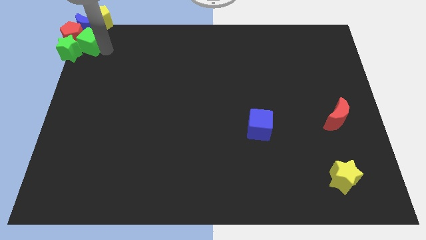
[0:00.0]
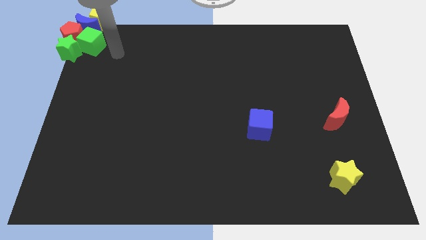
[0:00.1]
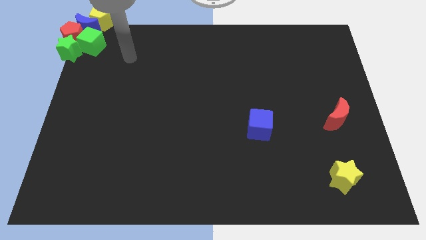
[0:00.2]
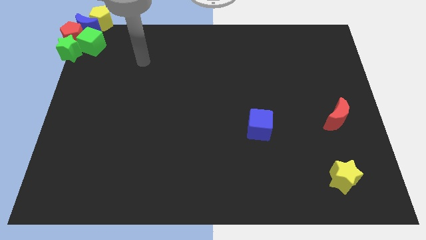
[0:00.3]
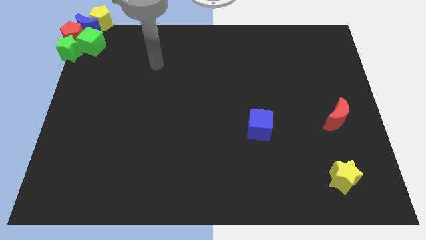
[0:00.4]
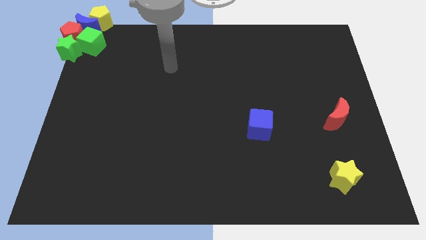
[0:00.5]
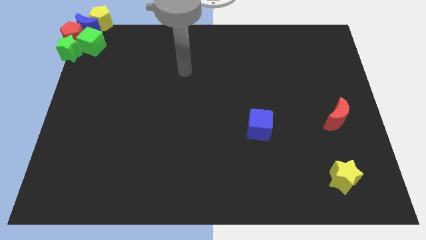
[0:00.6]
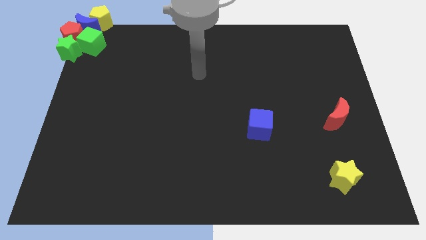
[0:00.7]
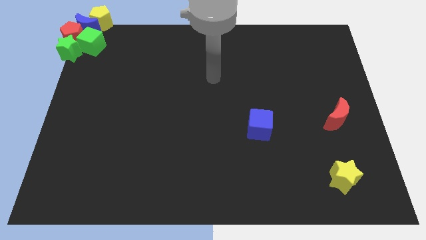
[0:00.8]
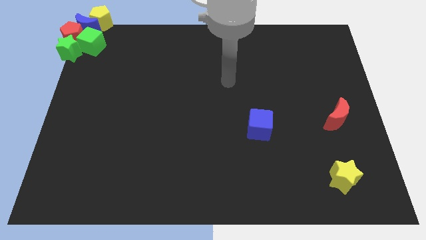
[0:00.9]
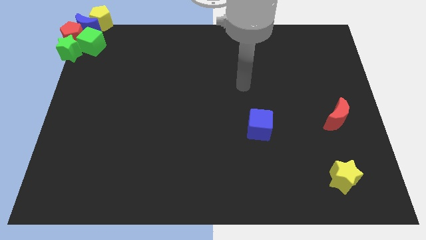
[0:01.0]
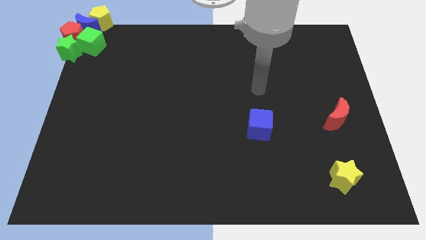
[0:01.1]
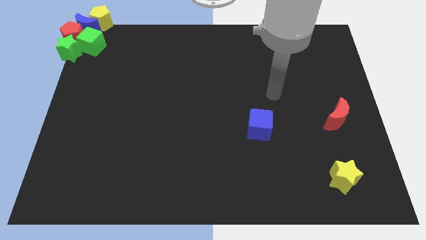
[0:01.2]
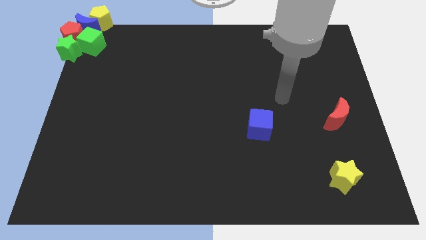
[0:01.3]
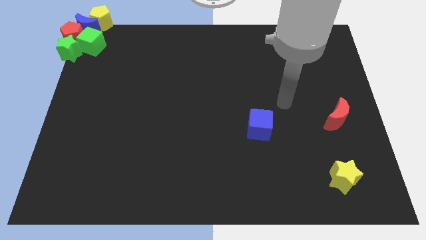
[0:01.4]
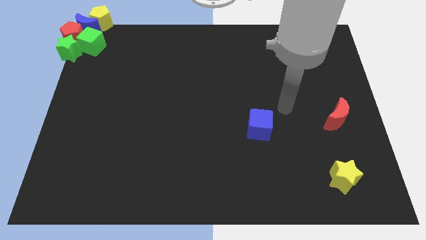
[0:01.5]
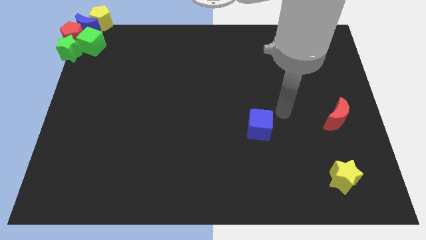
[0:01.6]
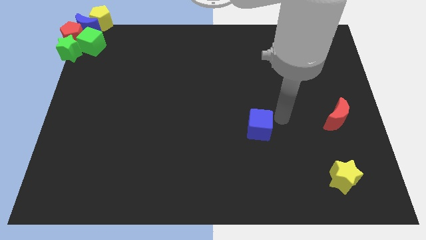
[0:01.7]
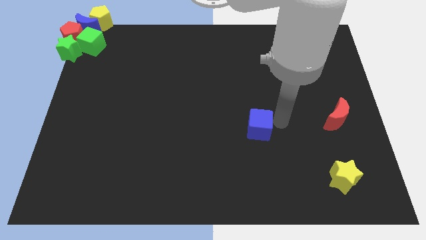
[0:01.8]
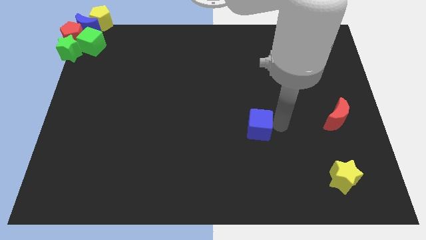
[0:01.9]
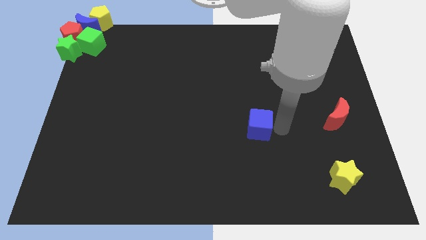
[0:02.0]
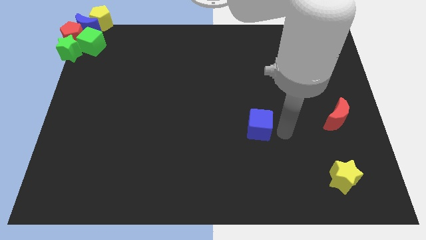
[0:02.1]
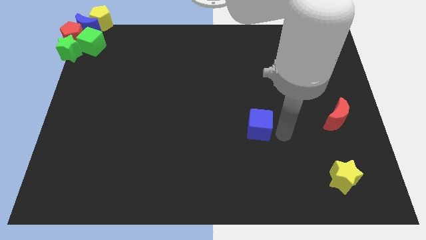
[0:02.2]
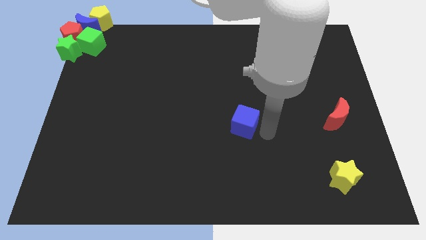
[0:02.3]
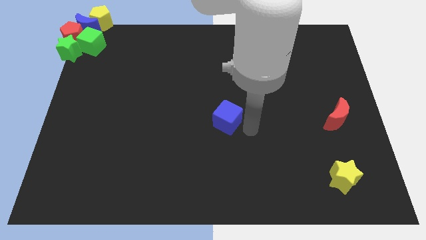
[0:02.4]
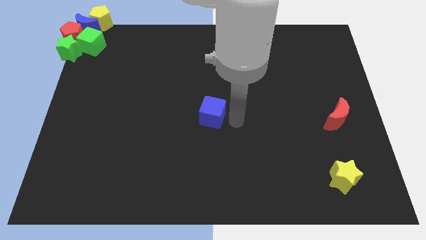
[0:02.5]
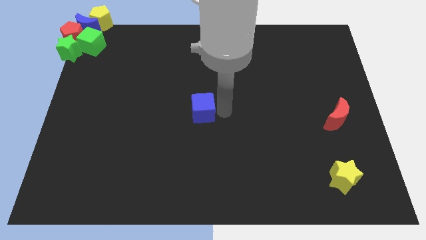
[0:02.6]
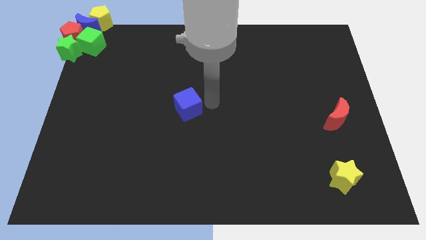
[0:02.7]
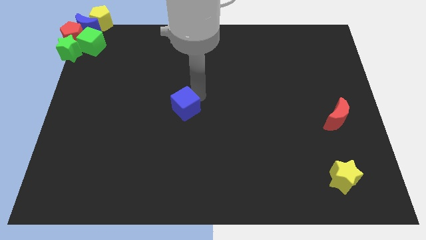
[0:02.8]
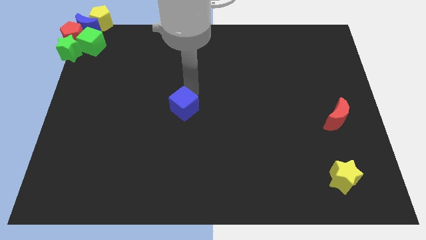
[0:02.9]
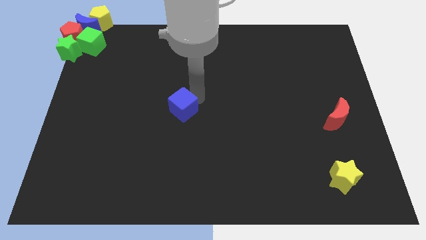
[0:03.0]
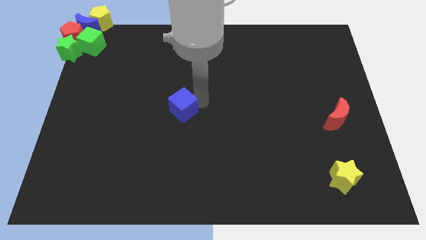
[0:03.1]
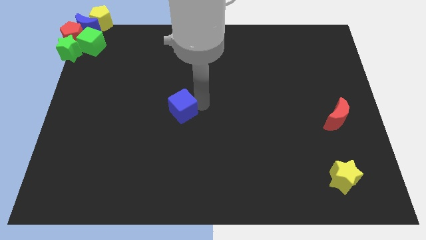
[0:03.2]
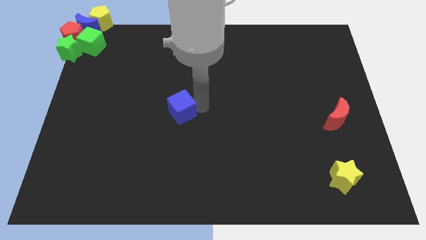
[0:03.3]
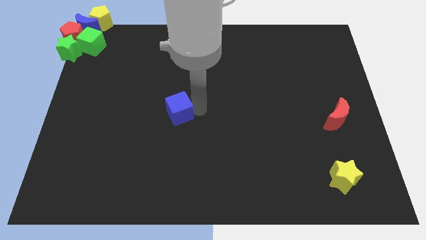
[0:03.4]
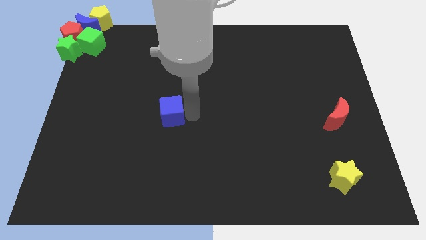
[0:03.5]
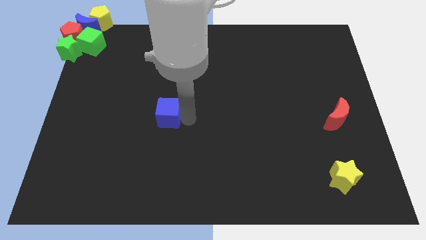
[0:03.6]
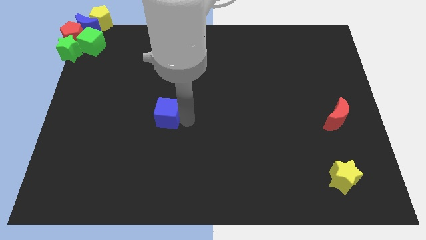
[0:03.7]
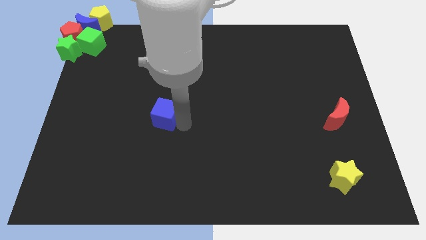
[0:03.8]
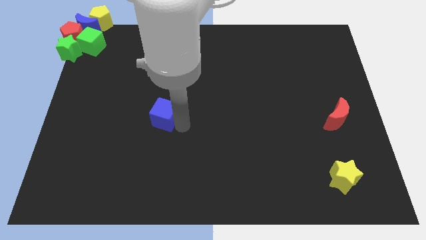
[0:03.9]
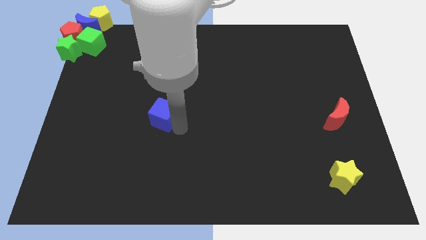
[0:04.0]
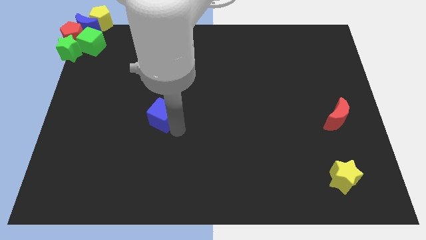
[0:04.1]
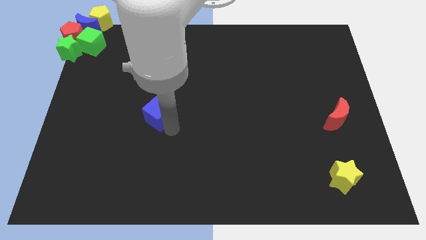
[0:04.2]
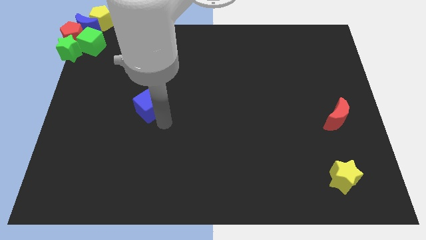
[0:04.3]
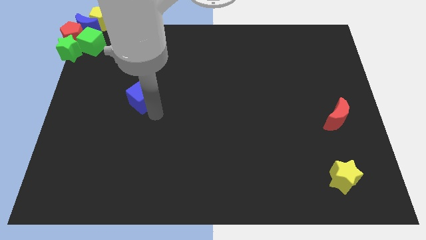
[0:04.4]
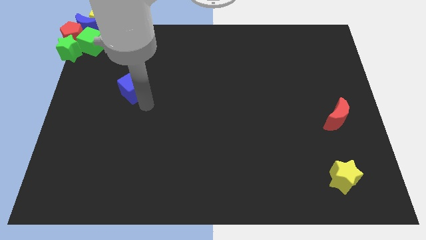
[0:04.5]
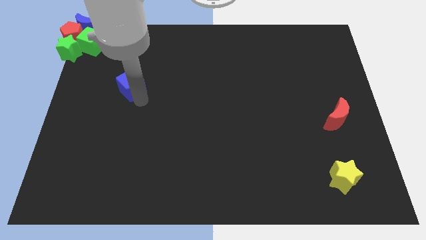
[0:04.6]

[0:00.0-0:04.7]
slide the blue cube towards the group of blocks

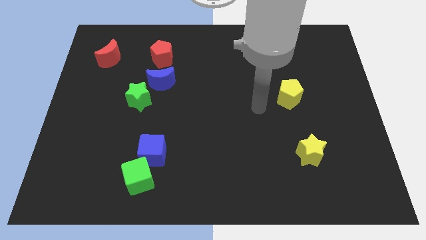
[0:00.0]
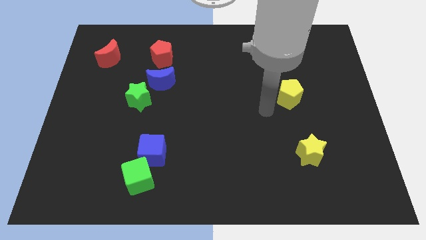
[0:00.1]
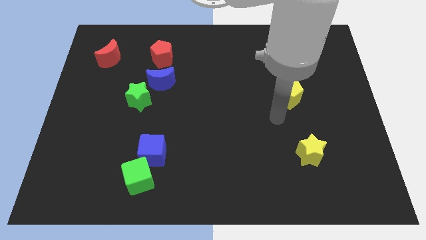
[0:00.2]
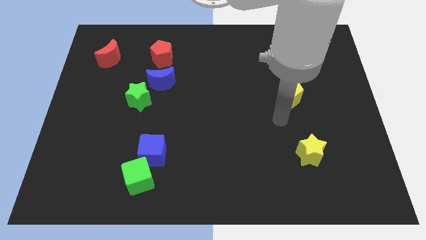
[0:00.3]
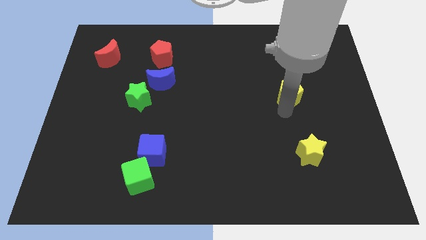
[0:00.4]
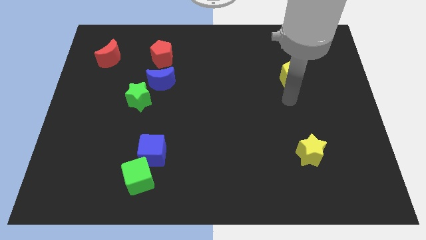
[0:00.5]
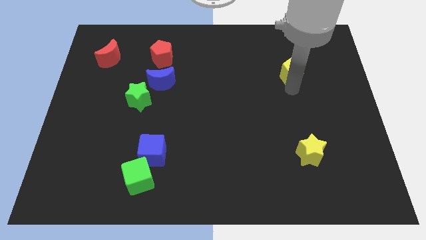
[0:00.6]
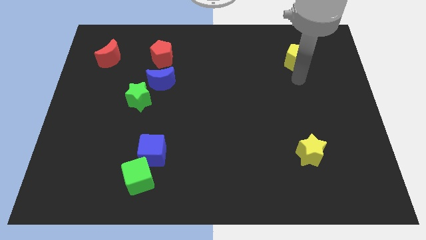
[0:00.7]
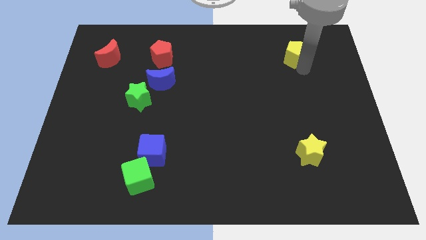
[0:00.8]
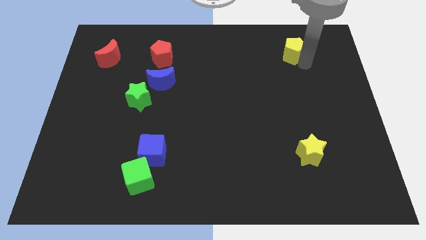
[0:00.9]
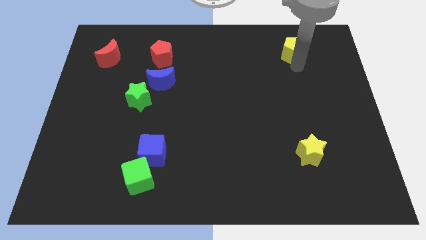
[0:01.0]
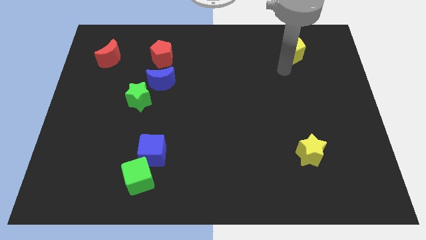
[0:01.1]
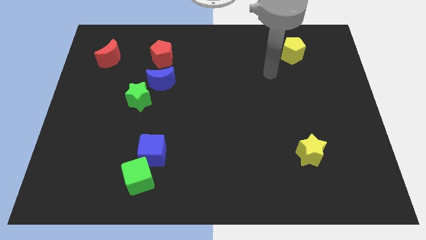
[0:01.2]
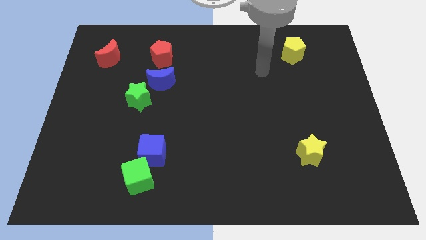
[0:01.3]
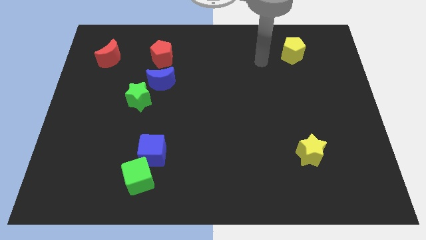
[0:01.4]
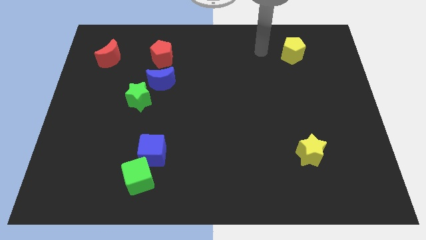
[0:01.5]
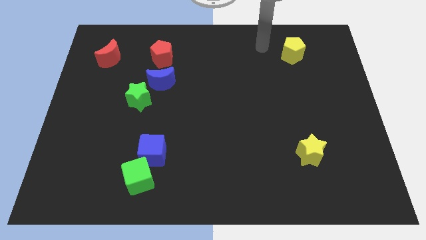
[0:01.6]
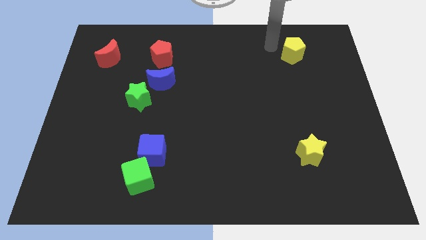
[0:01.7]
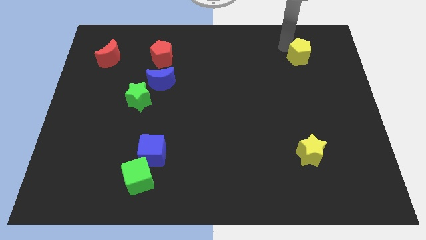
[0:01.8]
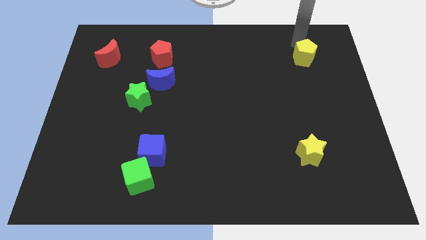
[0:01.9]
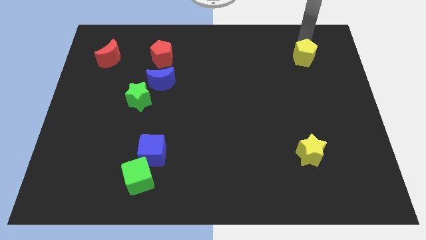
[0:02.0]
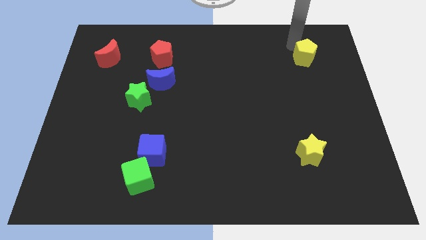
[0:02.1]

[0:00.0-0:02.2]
push the yellow star to the top right of the board

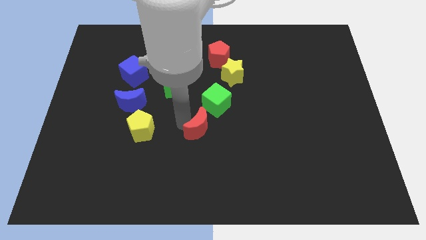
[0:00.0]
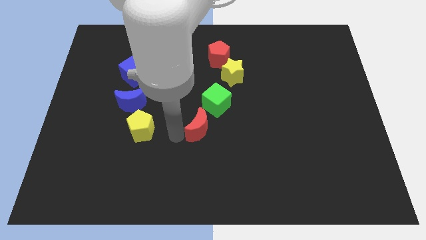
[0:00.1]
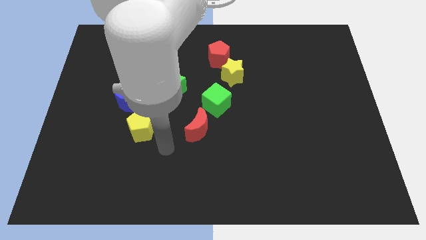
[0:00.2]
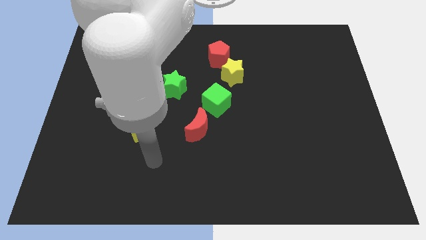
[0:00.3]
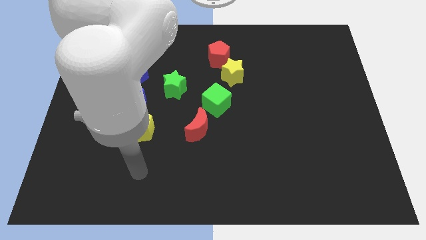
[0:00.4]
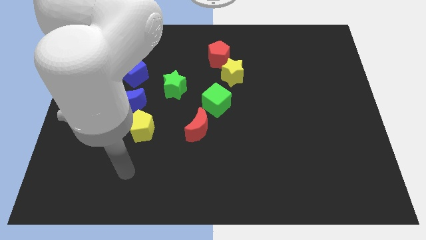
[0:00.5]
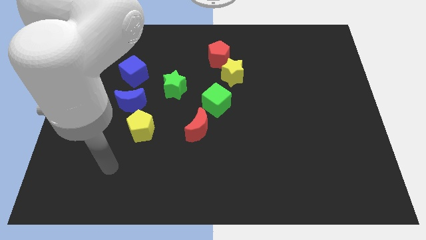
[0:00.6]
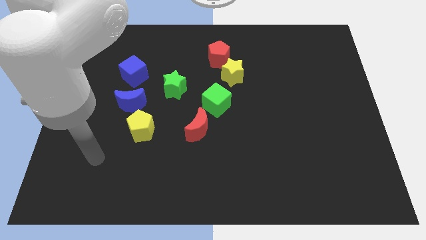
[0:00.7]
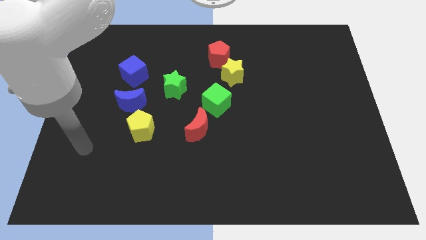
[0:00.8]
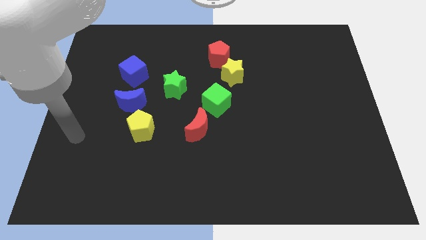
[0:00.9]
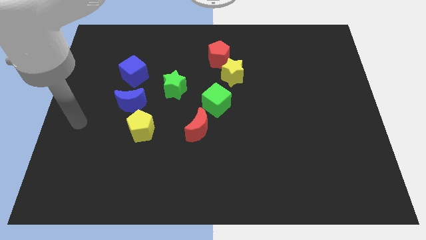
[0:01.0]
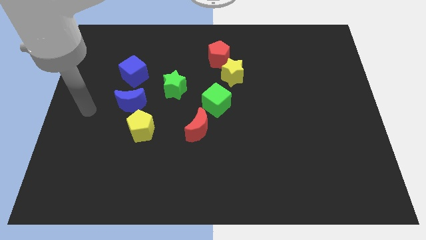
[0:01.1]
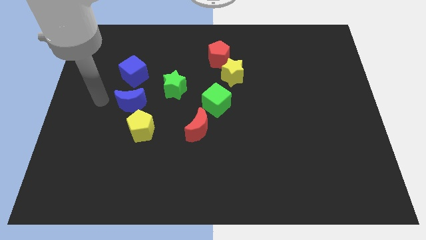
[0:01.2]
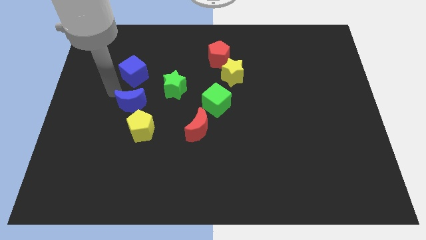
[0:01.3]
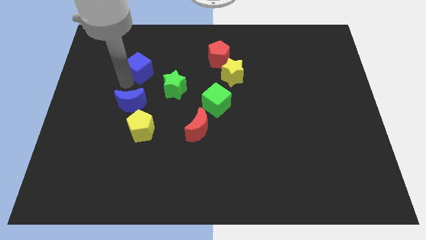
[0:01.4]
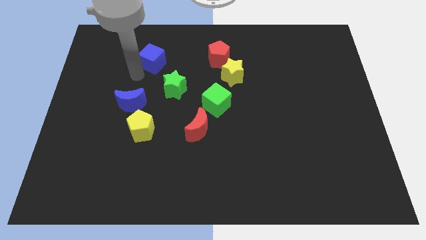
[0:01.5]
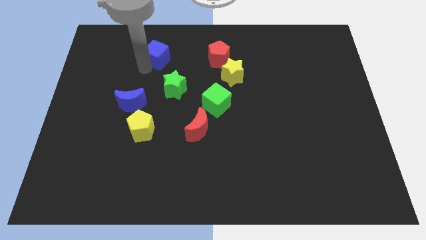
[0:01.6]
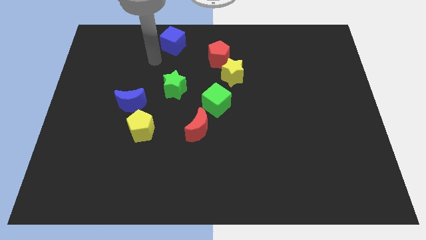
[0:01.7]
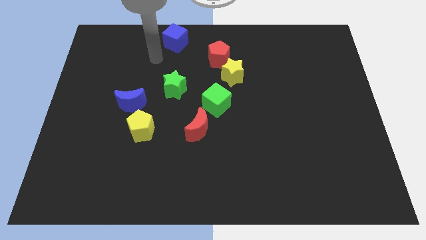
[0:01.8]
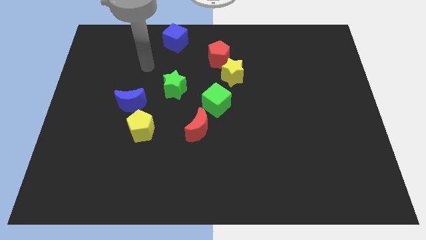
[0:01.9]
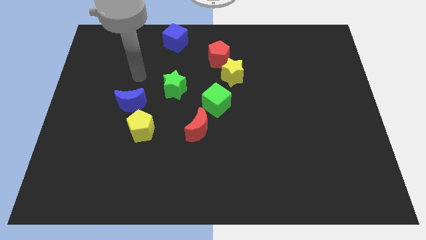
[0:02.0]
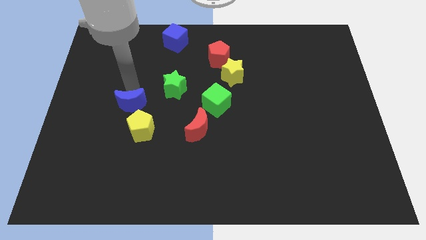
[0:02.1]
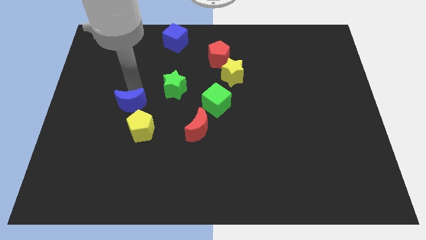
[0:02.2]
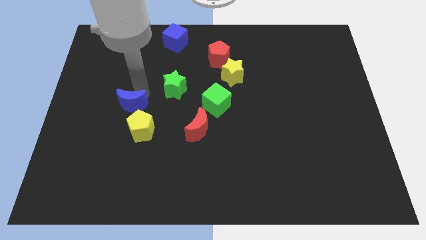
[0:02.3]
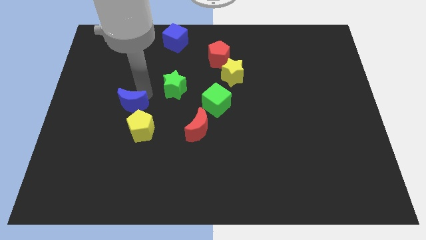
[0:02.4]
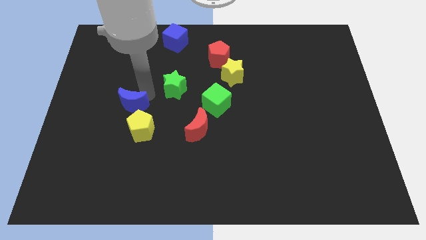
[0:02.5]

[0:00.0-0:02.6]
push the blue cube to the top
